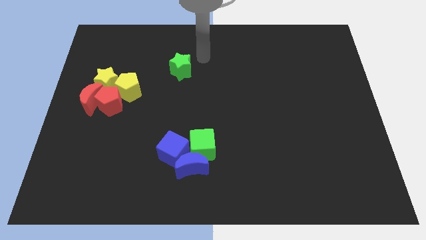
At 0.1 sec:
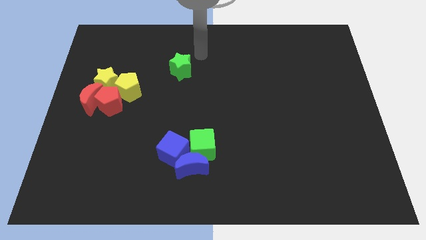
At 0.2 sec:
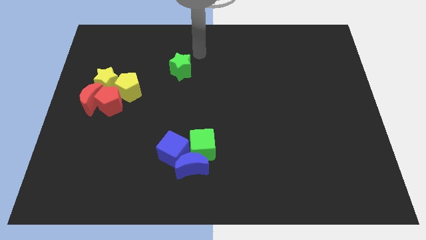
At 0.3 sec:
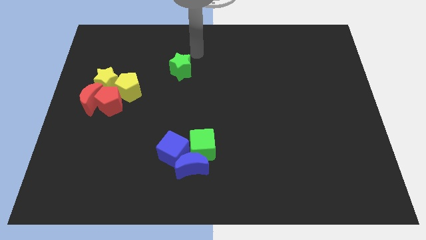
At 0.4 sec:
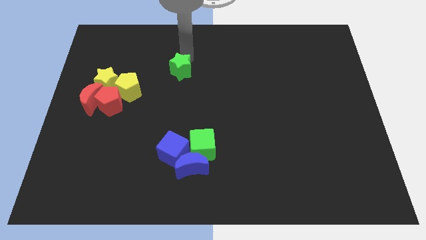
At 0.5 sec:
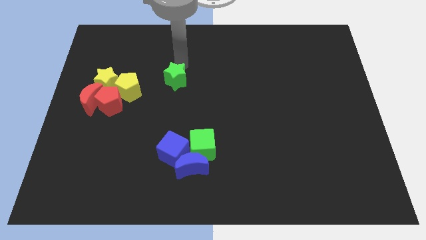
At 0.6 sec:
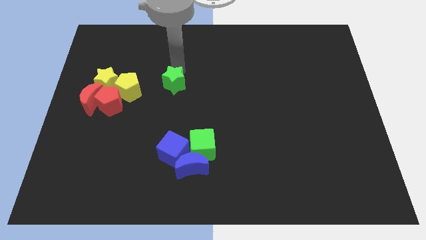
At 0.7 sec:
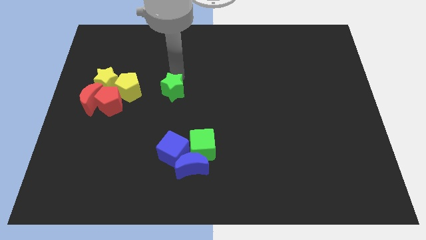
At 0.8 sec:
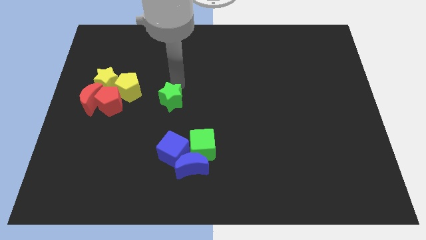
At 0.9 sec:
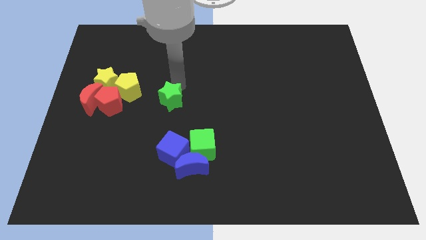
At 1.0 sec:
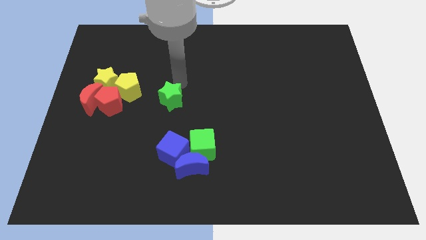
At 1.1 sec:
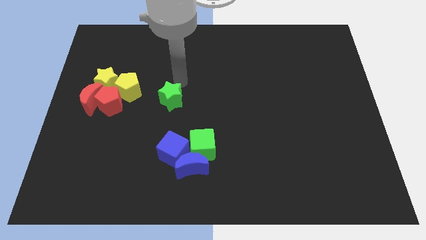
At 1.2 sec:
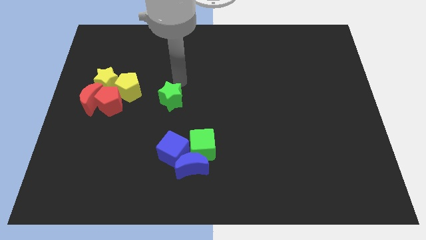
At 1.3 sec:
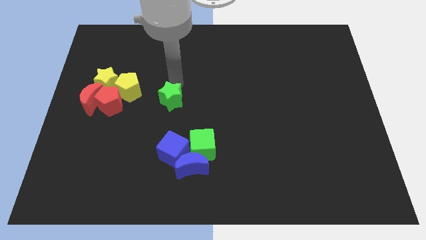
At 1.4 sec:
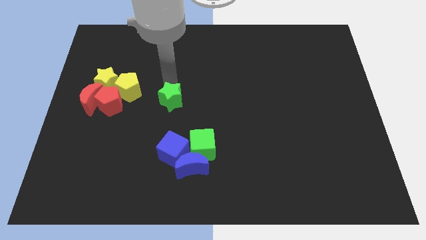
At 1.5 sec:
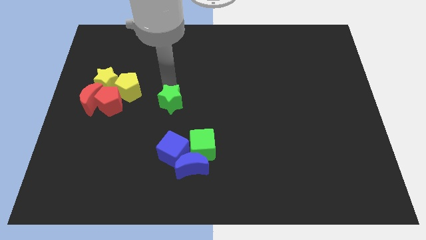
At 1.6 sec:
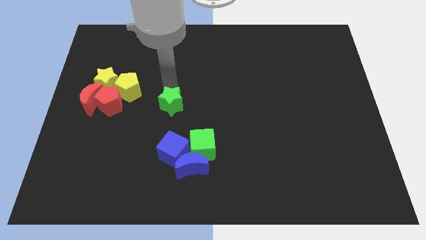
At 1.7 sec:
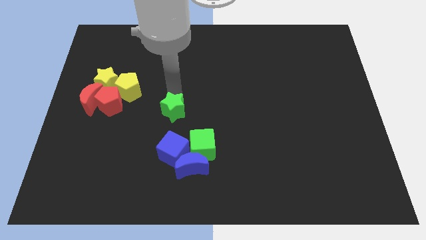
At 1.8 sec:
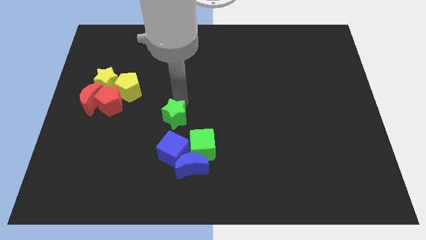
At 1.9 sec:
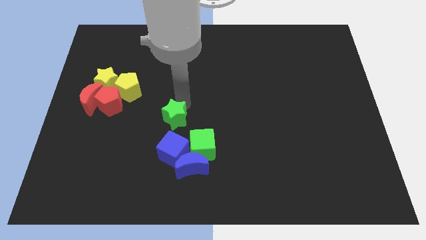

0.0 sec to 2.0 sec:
place the green star in between the yellow pentagon and green cube in diagonally

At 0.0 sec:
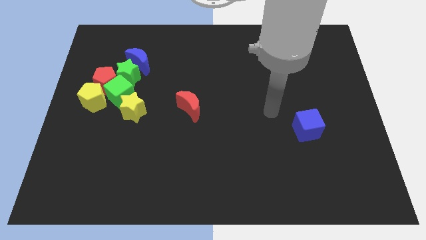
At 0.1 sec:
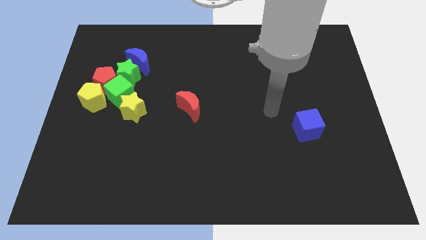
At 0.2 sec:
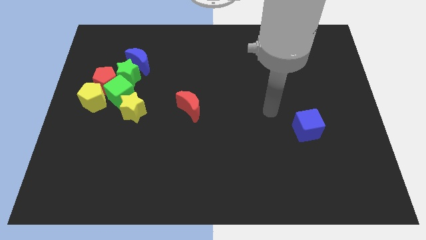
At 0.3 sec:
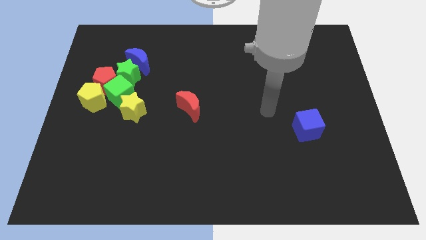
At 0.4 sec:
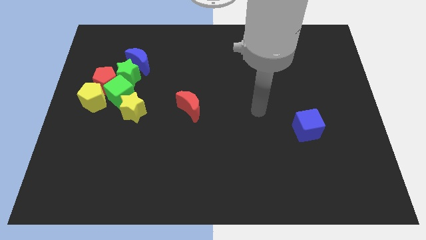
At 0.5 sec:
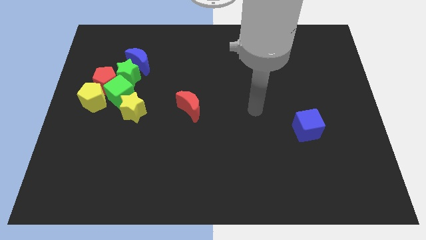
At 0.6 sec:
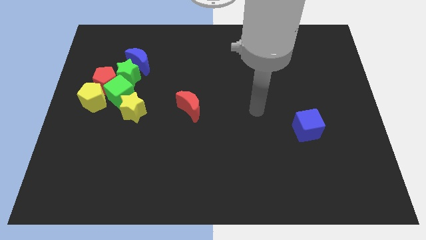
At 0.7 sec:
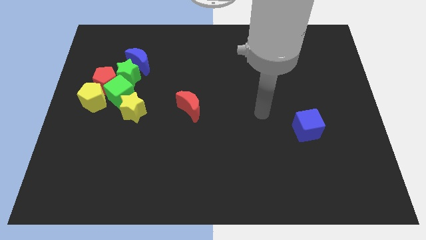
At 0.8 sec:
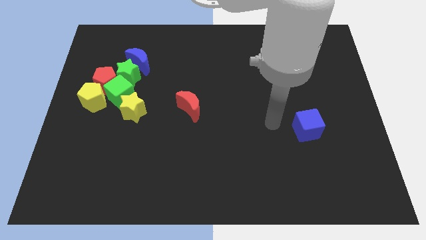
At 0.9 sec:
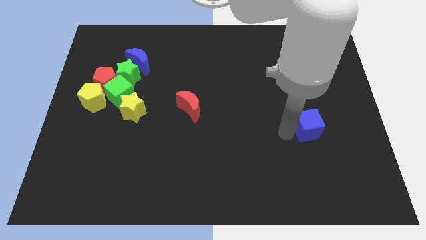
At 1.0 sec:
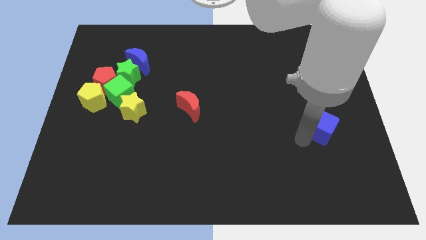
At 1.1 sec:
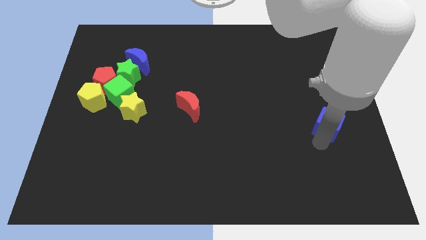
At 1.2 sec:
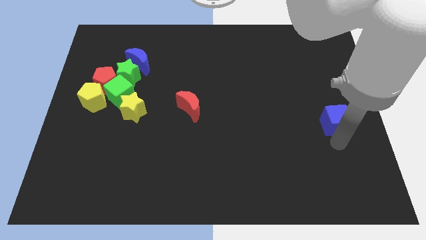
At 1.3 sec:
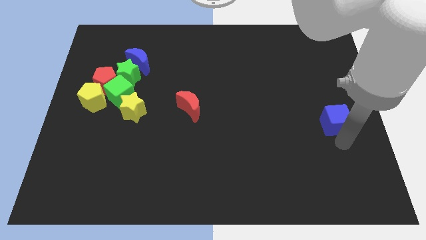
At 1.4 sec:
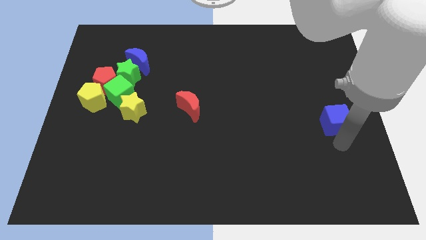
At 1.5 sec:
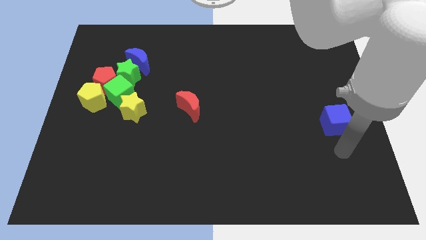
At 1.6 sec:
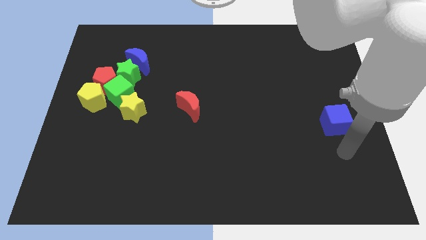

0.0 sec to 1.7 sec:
slightly move the blue cube to the right of the board

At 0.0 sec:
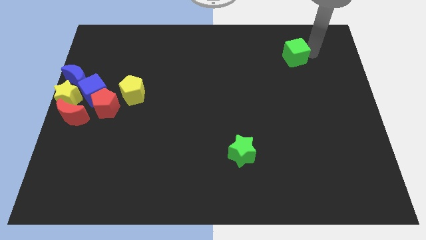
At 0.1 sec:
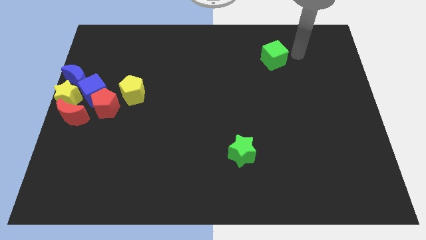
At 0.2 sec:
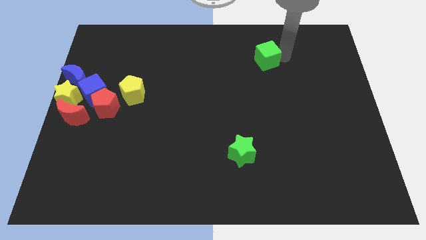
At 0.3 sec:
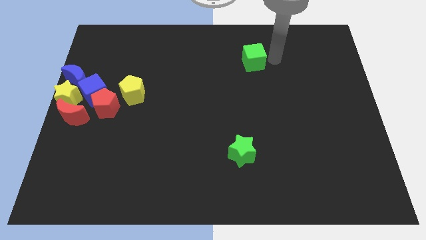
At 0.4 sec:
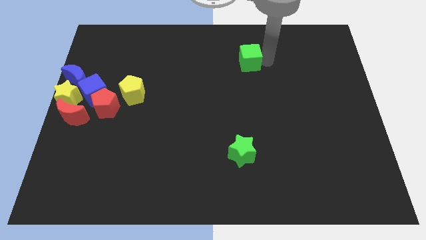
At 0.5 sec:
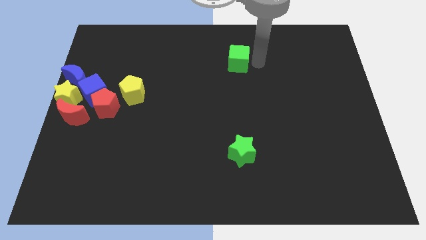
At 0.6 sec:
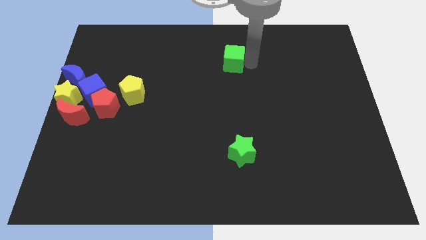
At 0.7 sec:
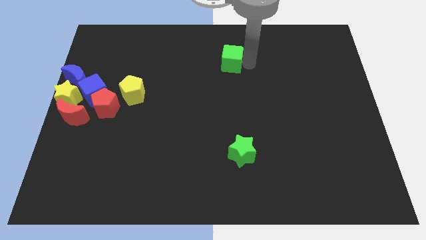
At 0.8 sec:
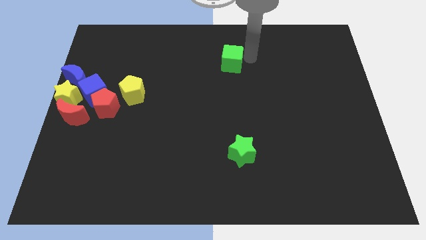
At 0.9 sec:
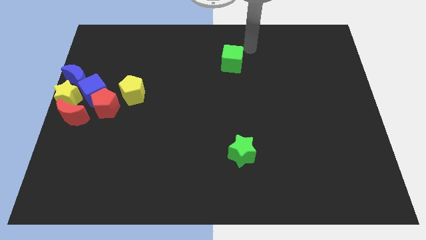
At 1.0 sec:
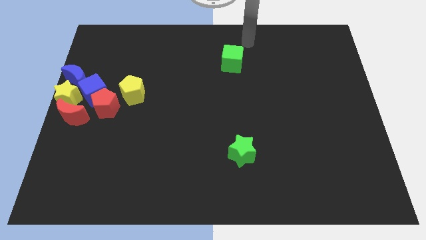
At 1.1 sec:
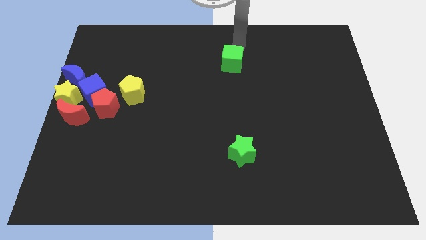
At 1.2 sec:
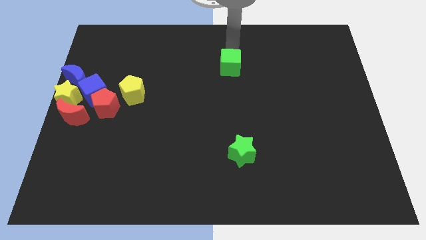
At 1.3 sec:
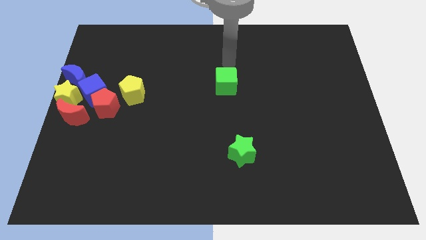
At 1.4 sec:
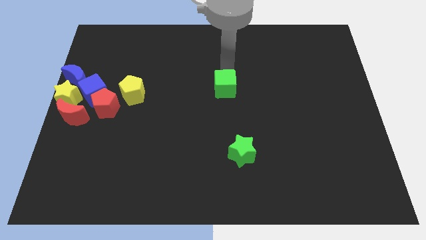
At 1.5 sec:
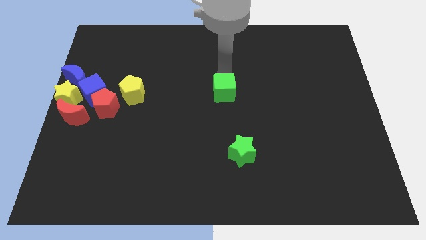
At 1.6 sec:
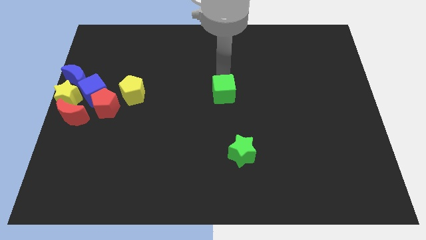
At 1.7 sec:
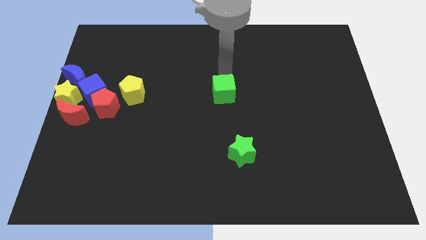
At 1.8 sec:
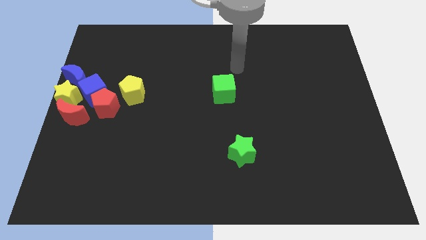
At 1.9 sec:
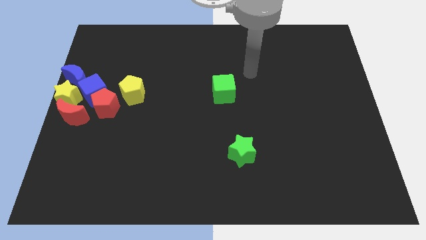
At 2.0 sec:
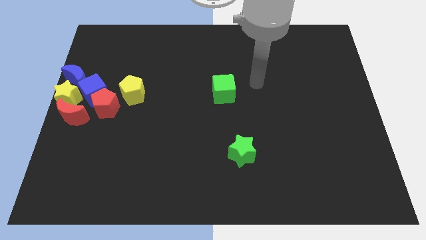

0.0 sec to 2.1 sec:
push the green cube towards the center of the board

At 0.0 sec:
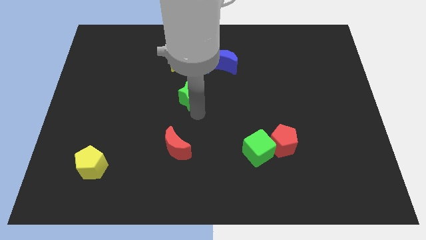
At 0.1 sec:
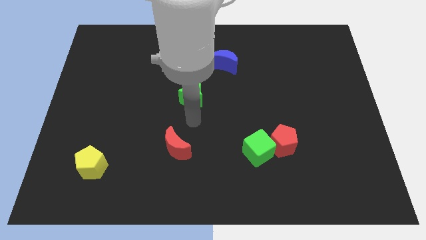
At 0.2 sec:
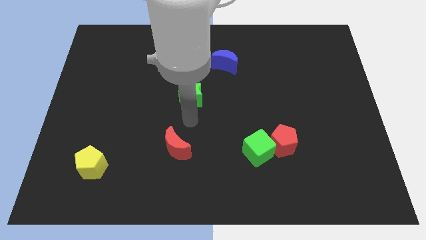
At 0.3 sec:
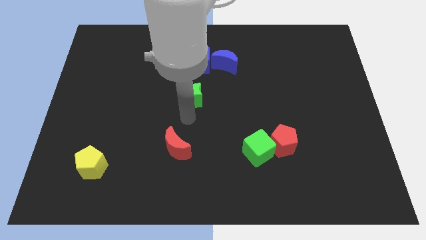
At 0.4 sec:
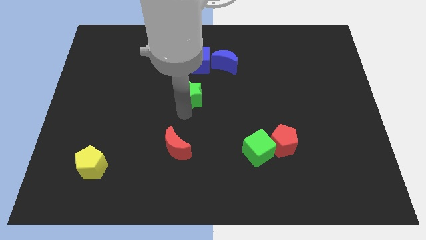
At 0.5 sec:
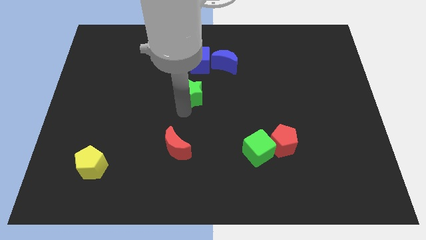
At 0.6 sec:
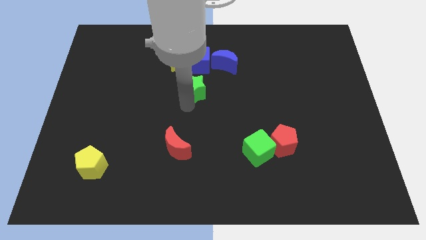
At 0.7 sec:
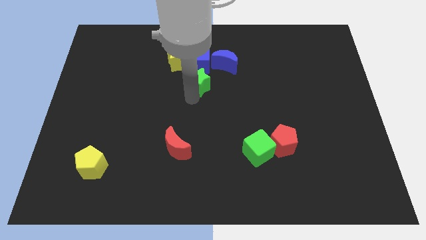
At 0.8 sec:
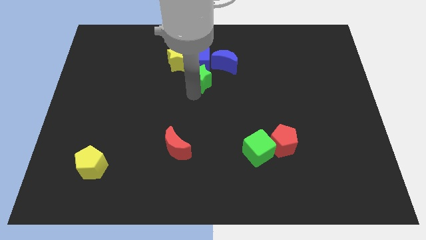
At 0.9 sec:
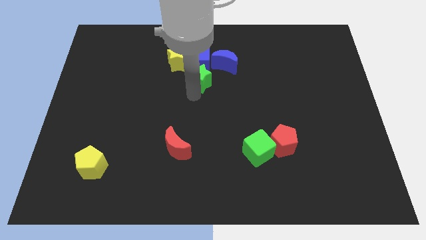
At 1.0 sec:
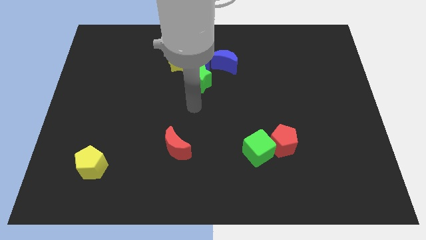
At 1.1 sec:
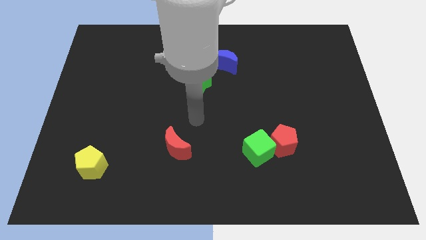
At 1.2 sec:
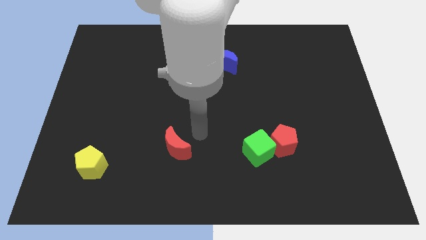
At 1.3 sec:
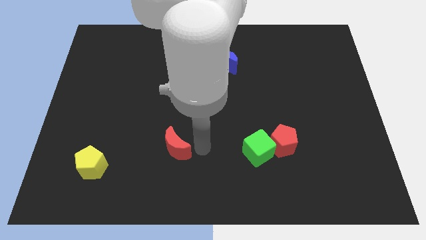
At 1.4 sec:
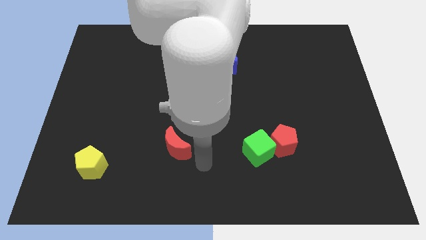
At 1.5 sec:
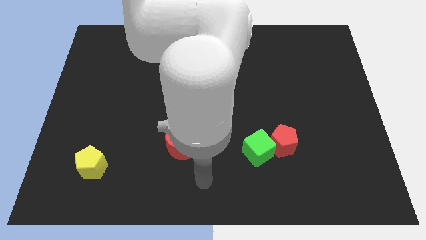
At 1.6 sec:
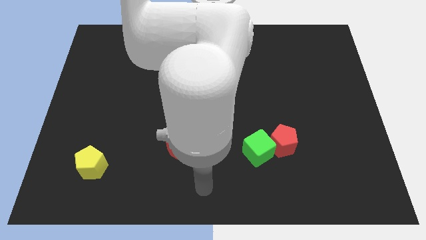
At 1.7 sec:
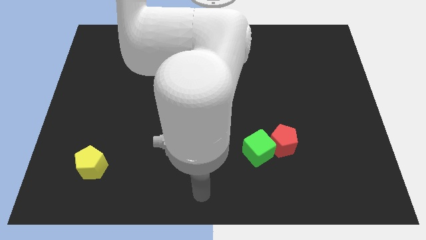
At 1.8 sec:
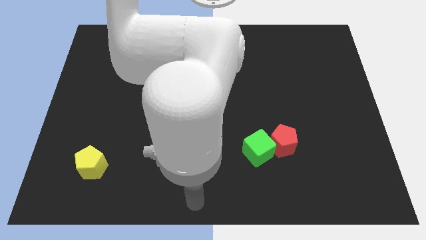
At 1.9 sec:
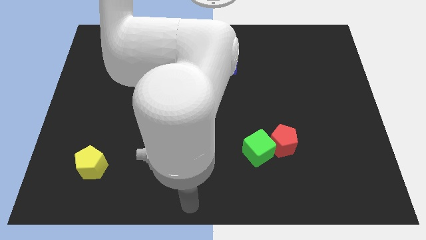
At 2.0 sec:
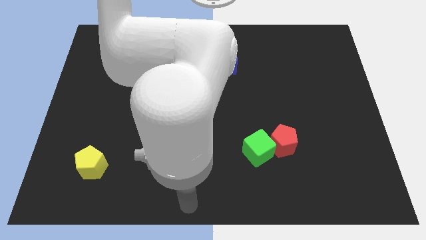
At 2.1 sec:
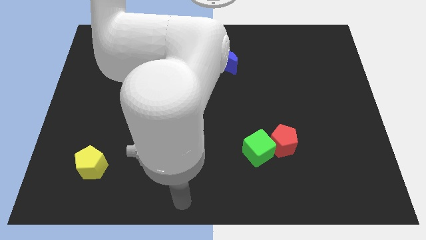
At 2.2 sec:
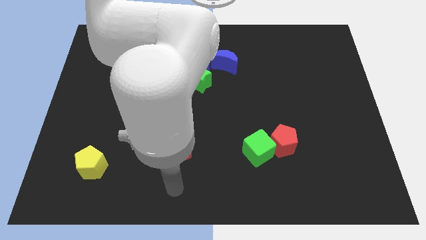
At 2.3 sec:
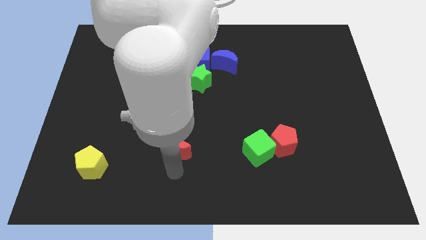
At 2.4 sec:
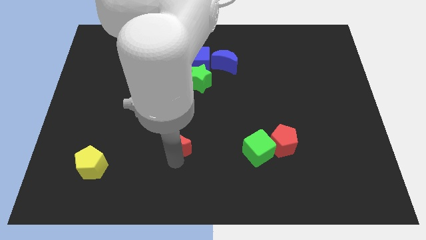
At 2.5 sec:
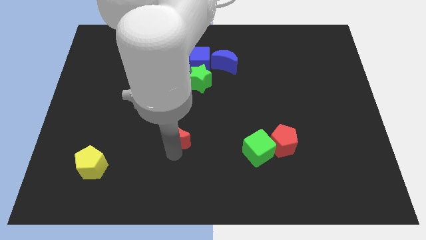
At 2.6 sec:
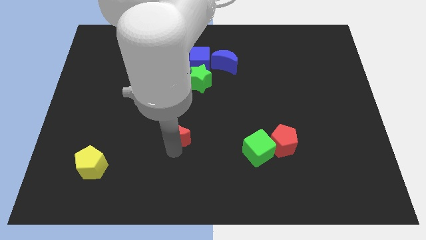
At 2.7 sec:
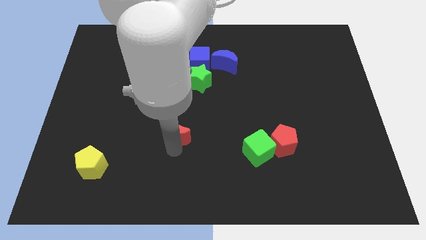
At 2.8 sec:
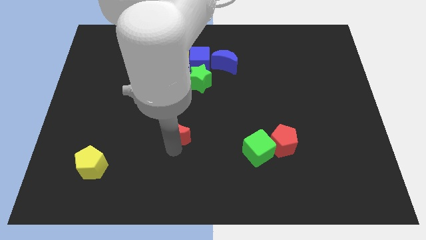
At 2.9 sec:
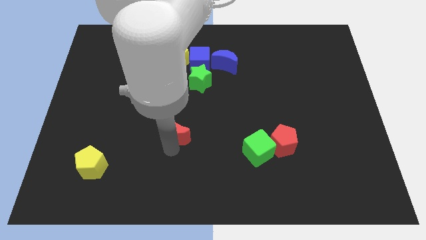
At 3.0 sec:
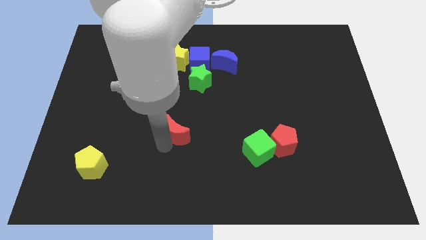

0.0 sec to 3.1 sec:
move the red moon diagonally to the top right of yellow pentagon
